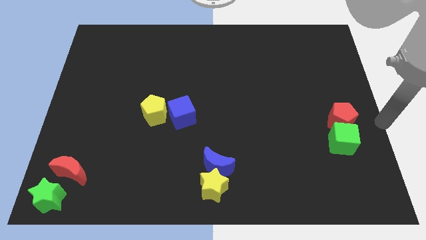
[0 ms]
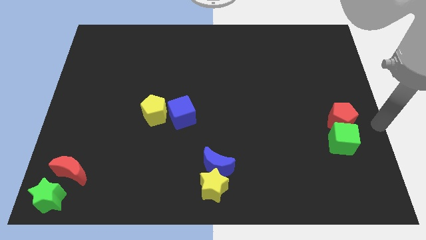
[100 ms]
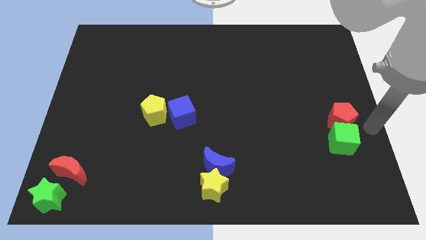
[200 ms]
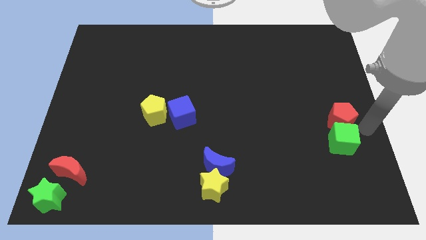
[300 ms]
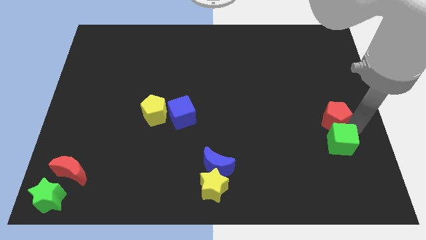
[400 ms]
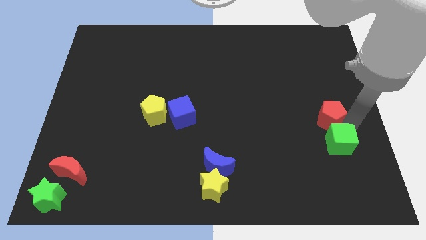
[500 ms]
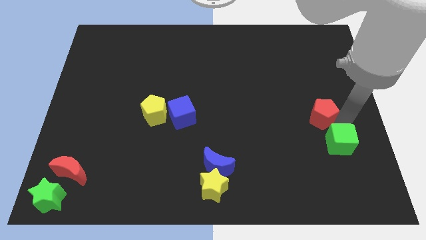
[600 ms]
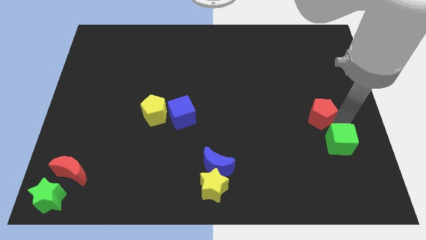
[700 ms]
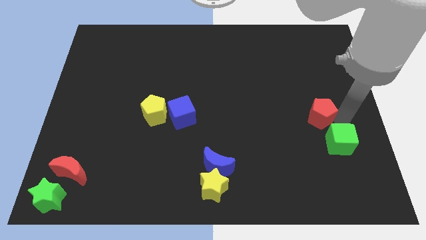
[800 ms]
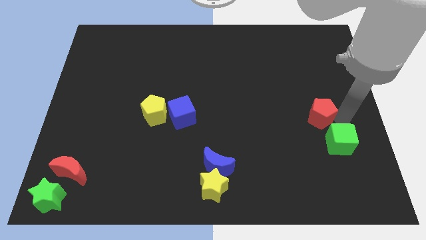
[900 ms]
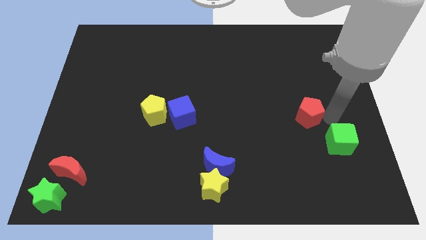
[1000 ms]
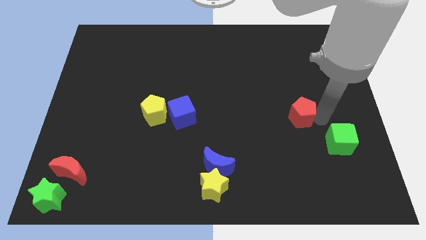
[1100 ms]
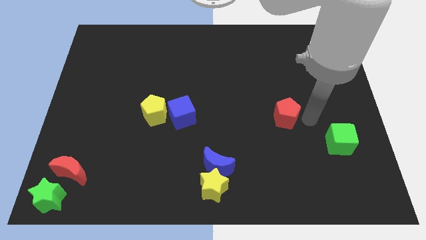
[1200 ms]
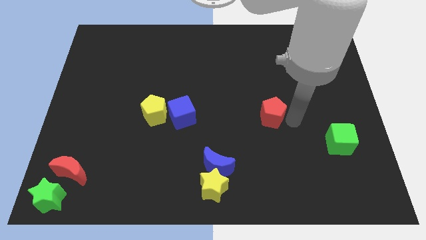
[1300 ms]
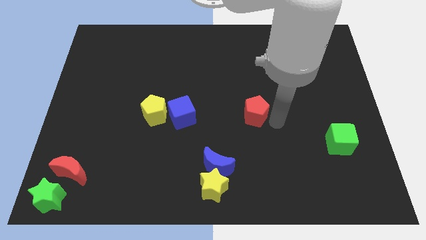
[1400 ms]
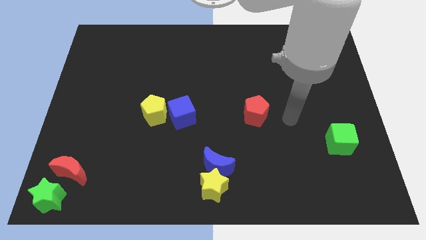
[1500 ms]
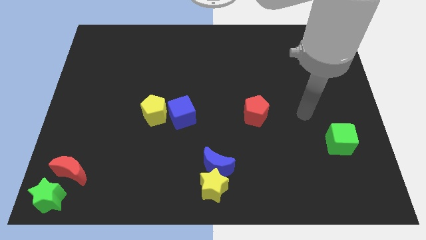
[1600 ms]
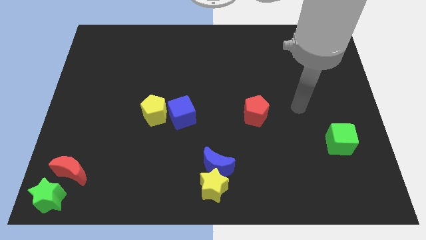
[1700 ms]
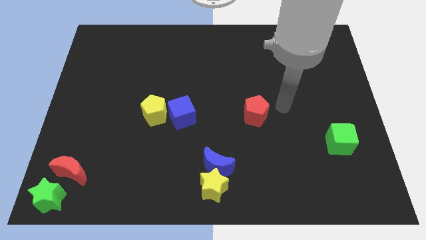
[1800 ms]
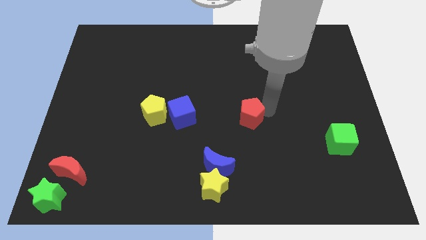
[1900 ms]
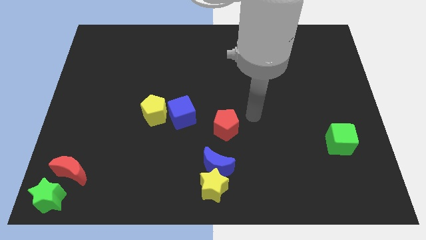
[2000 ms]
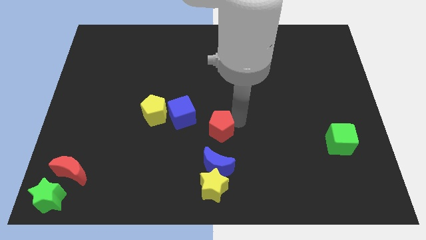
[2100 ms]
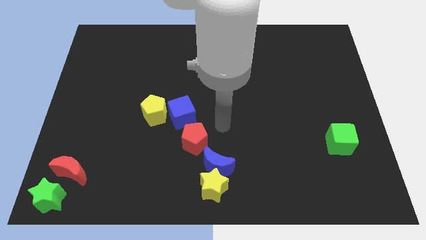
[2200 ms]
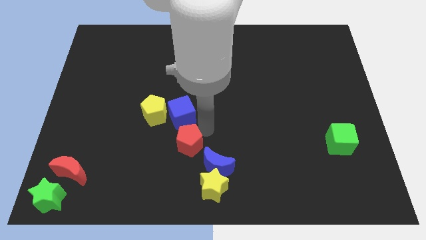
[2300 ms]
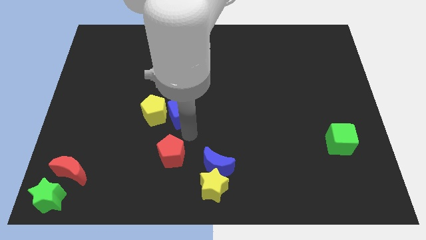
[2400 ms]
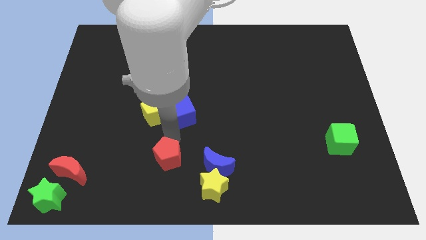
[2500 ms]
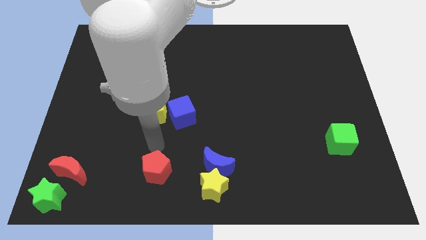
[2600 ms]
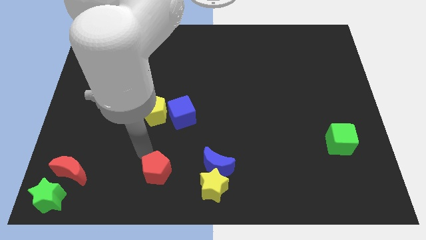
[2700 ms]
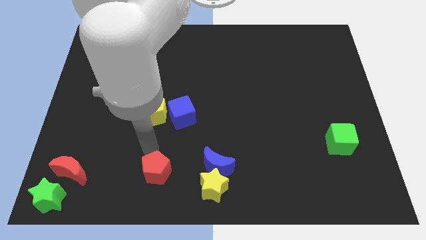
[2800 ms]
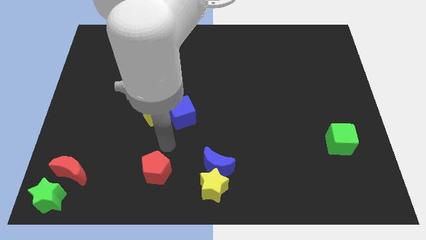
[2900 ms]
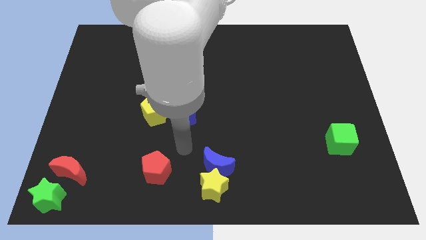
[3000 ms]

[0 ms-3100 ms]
move the red pentagon to the vertical bottom side of the yellow pentagon

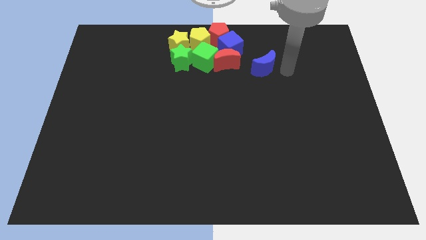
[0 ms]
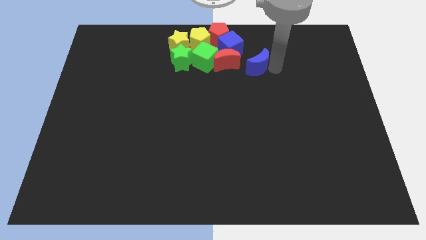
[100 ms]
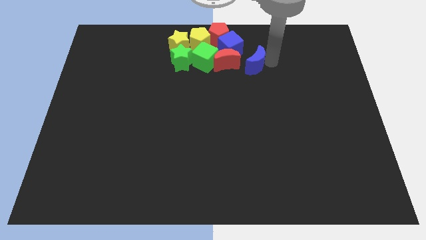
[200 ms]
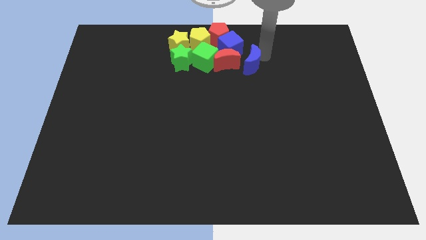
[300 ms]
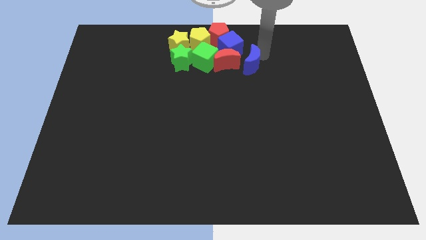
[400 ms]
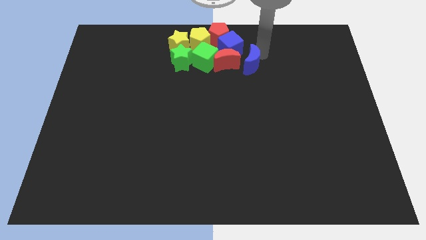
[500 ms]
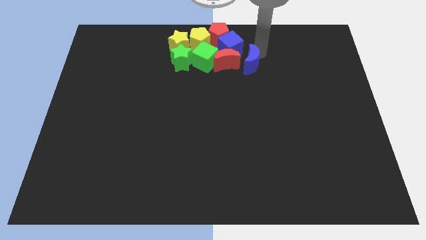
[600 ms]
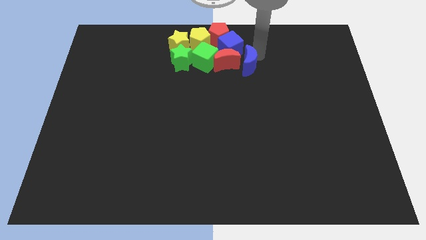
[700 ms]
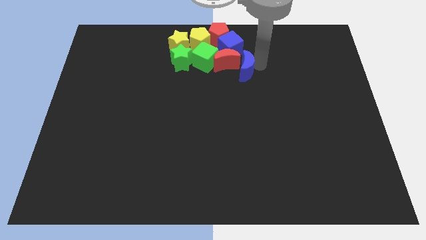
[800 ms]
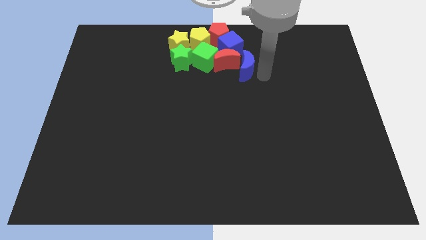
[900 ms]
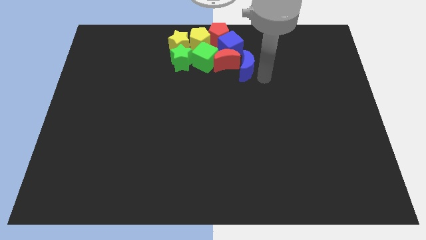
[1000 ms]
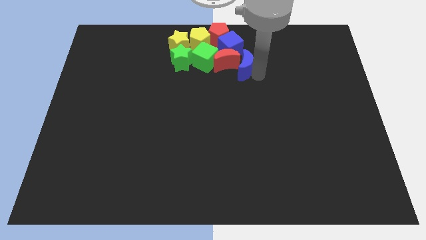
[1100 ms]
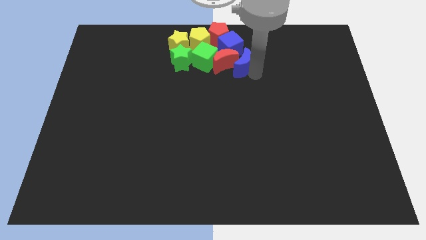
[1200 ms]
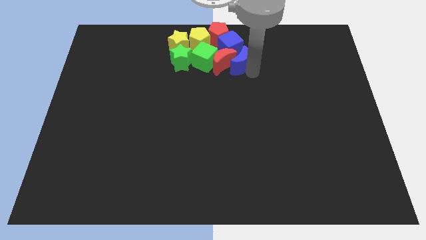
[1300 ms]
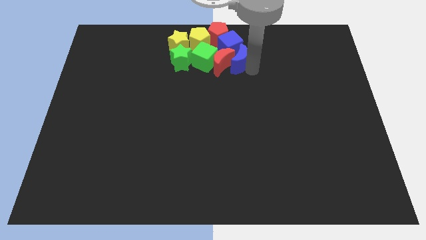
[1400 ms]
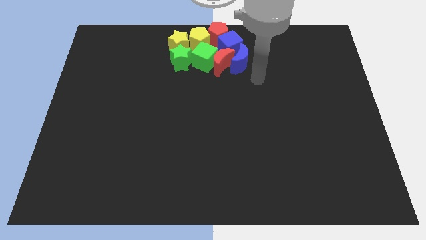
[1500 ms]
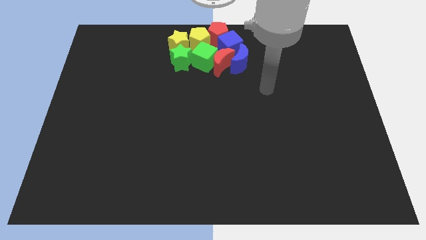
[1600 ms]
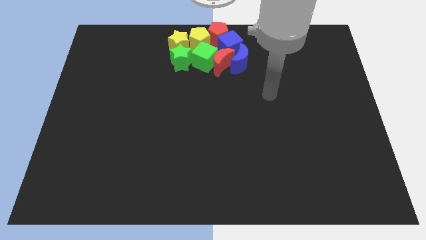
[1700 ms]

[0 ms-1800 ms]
group up all the blocks

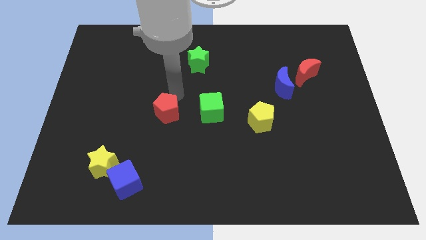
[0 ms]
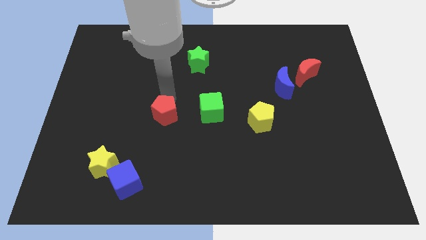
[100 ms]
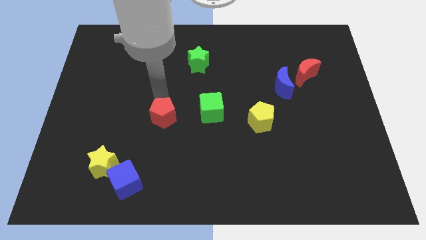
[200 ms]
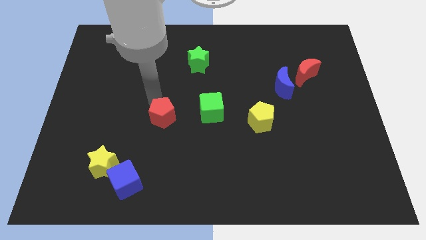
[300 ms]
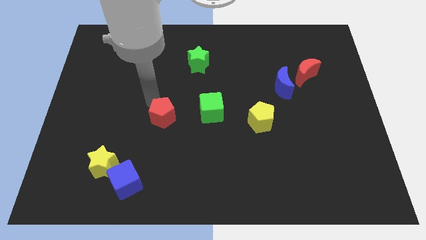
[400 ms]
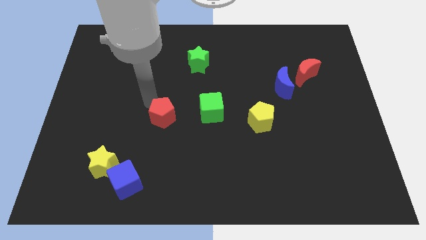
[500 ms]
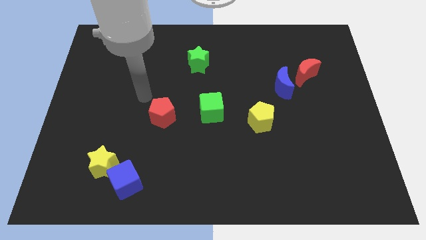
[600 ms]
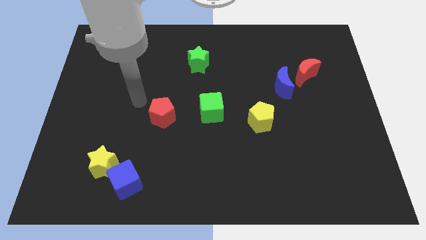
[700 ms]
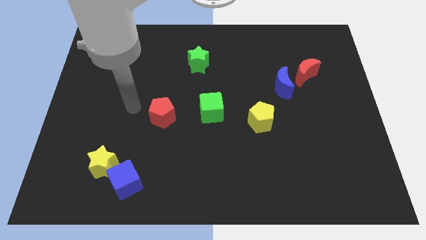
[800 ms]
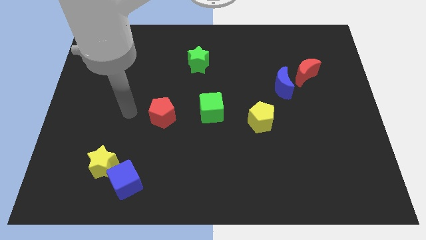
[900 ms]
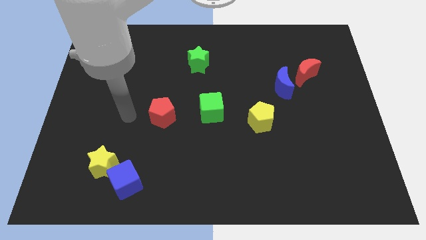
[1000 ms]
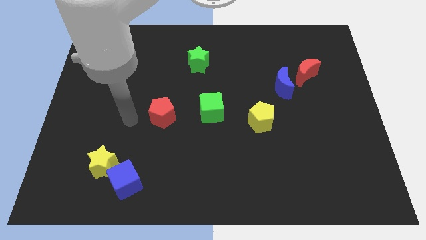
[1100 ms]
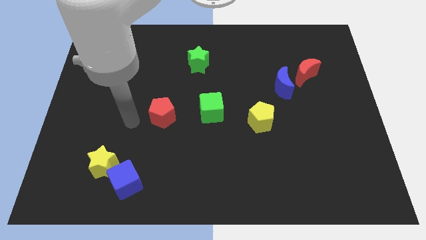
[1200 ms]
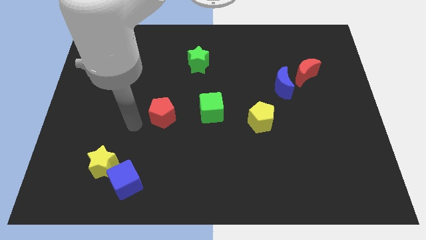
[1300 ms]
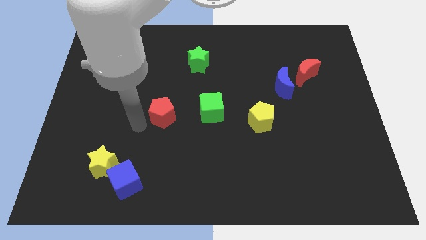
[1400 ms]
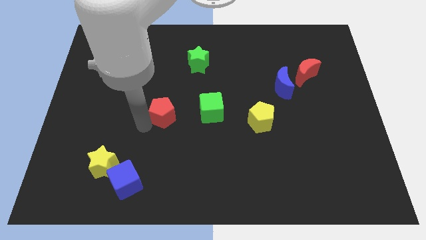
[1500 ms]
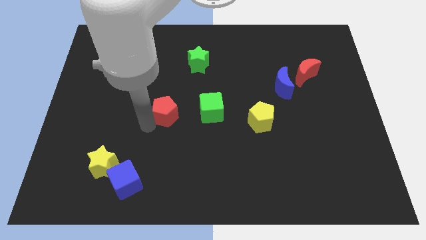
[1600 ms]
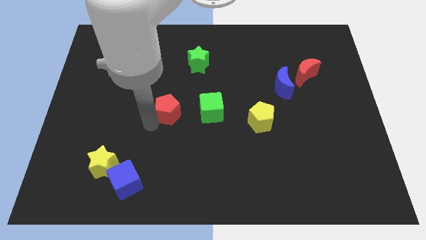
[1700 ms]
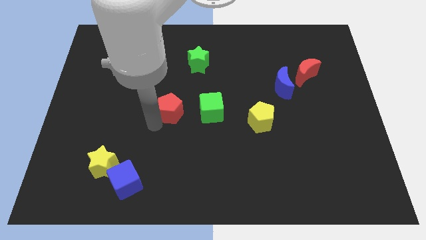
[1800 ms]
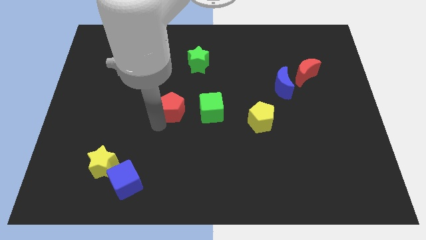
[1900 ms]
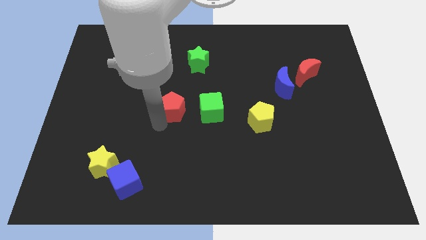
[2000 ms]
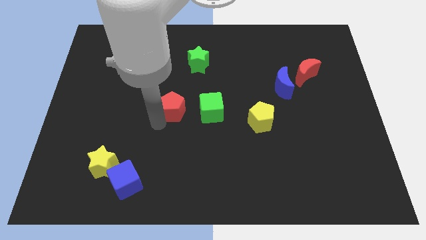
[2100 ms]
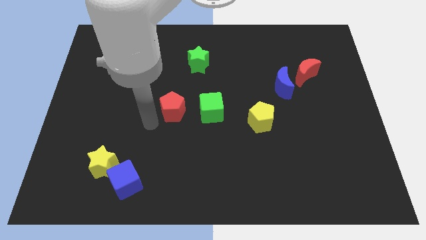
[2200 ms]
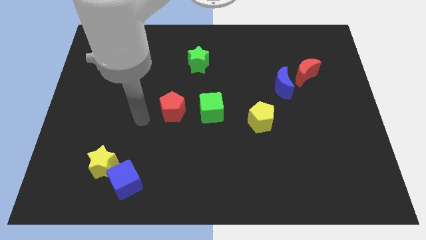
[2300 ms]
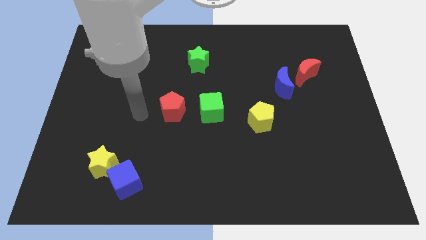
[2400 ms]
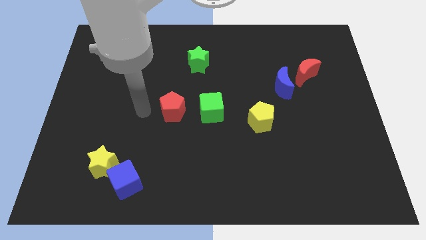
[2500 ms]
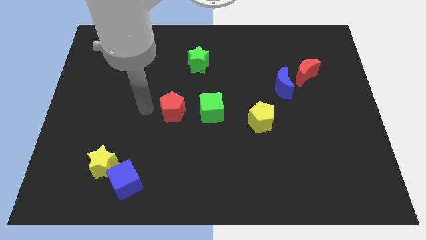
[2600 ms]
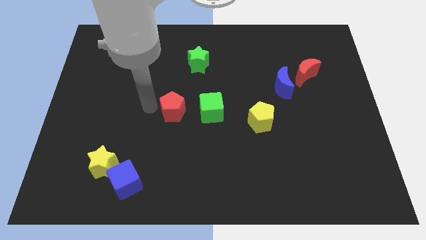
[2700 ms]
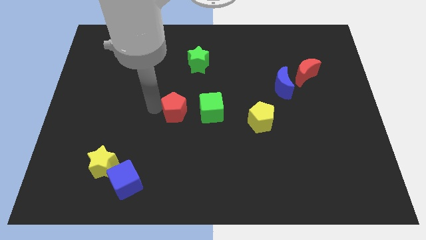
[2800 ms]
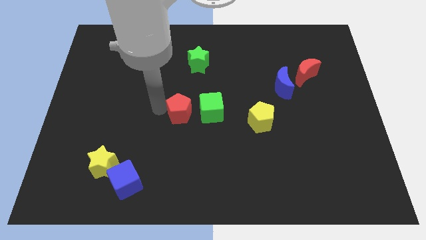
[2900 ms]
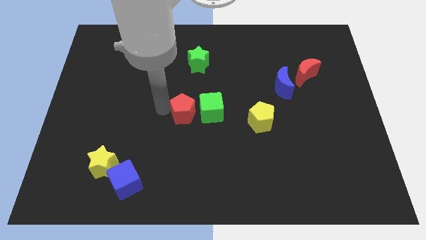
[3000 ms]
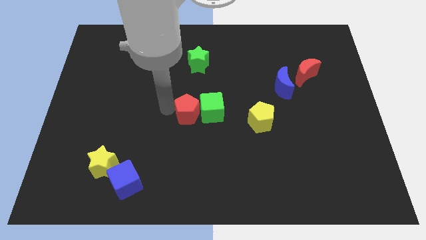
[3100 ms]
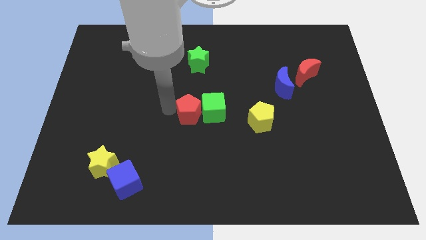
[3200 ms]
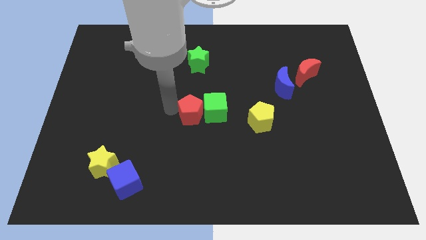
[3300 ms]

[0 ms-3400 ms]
push the red pentagon into the green cube

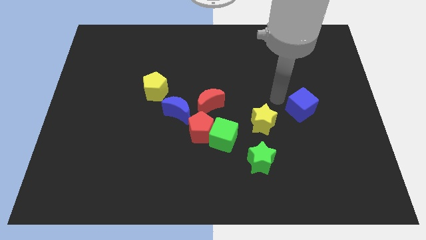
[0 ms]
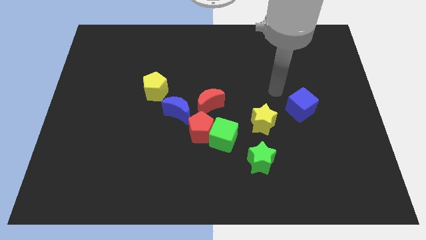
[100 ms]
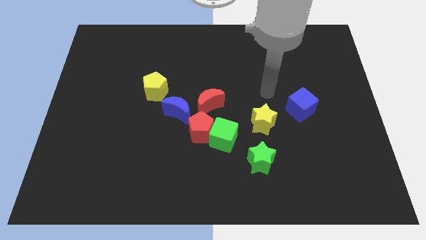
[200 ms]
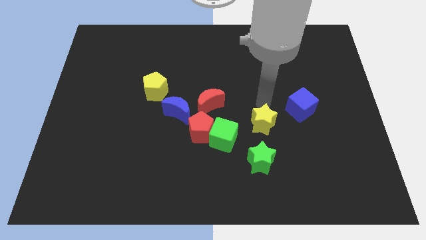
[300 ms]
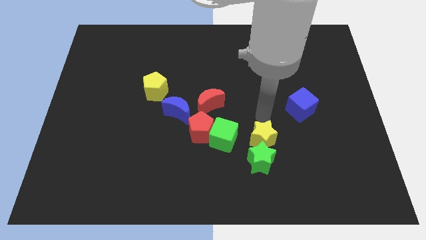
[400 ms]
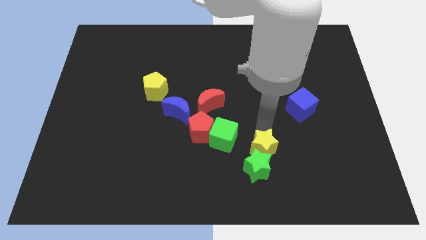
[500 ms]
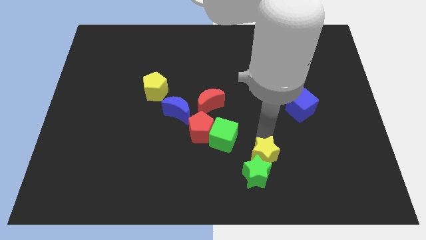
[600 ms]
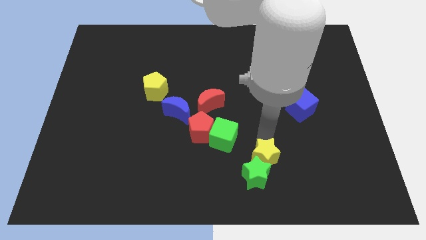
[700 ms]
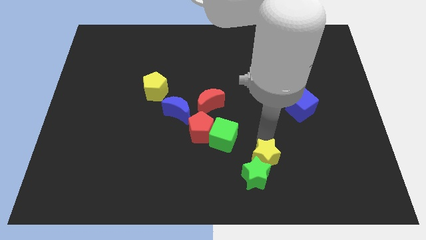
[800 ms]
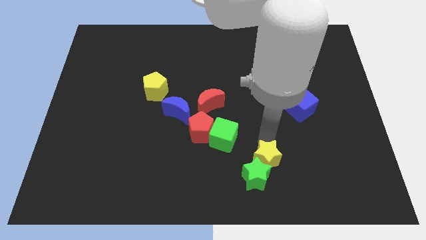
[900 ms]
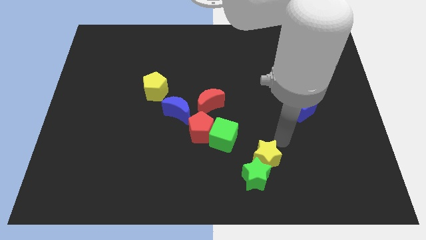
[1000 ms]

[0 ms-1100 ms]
move the yellow star into the green star
